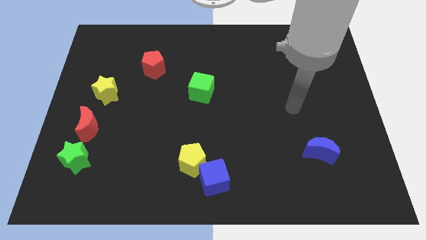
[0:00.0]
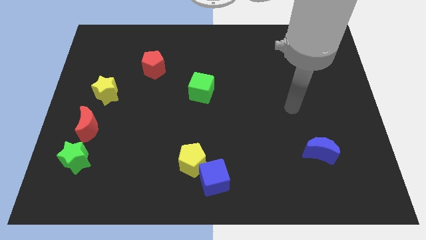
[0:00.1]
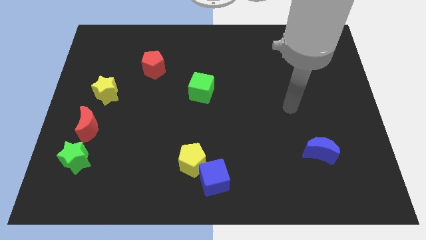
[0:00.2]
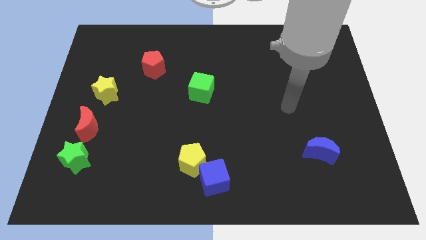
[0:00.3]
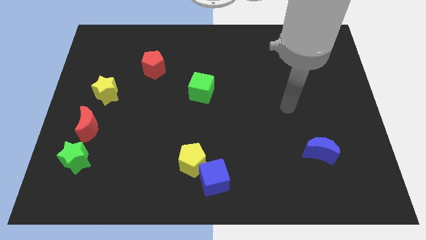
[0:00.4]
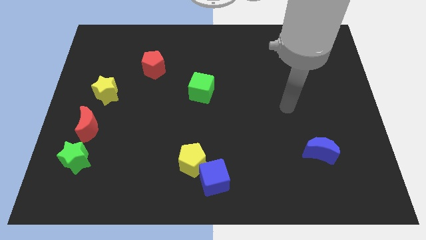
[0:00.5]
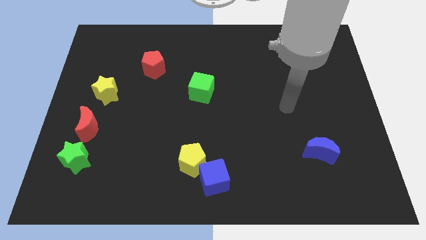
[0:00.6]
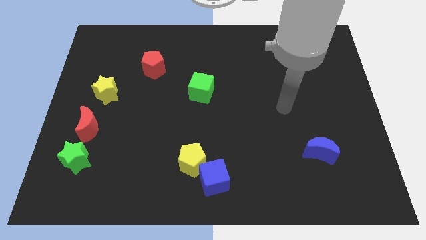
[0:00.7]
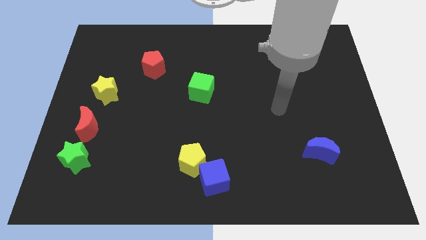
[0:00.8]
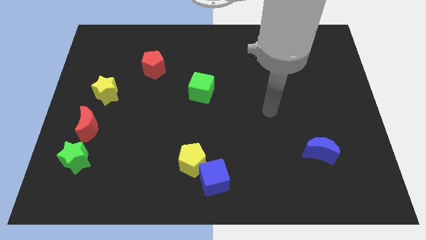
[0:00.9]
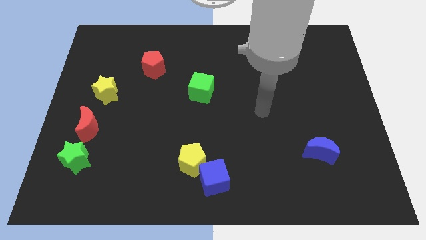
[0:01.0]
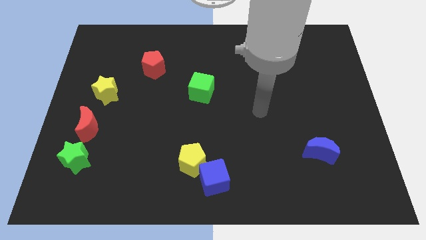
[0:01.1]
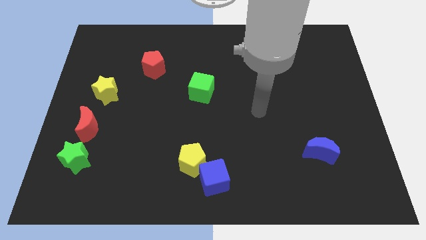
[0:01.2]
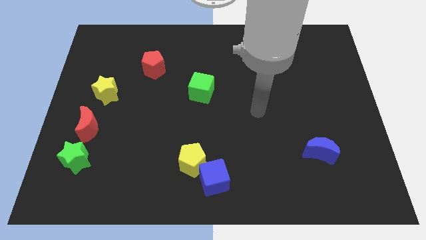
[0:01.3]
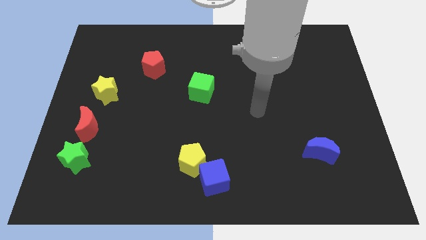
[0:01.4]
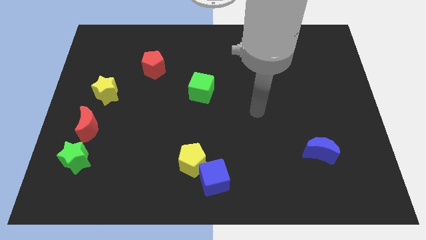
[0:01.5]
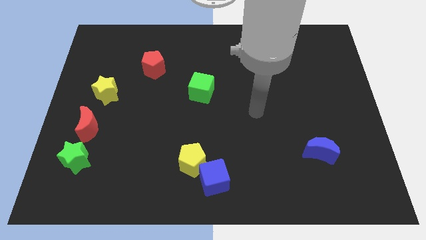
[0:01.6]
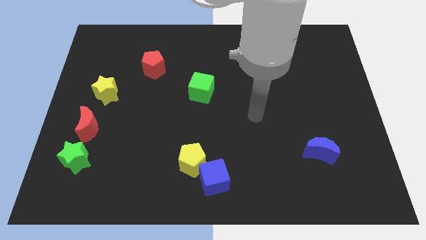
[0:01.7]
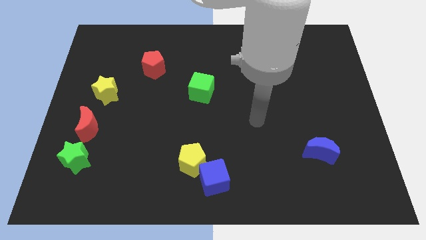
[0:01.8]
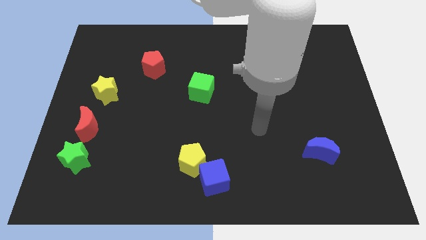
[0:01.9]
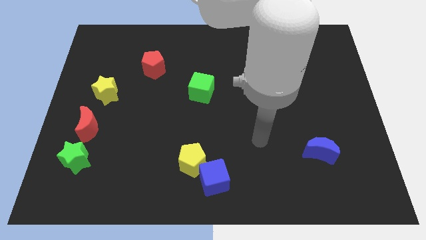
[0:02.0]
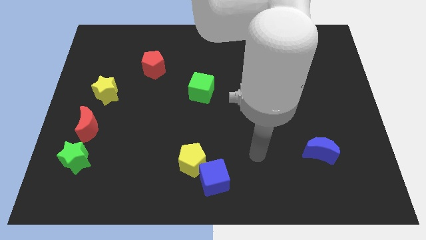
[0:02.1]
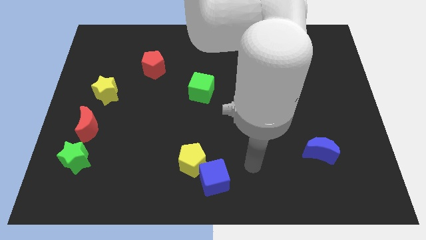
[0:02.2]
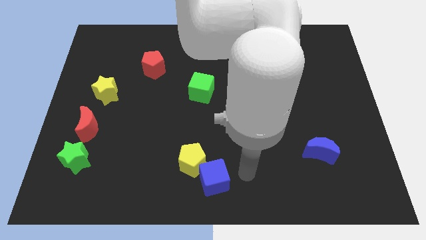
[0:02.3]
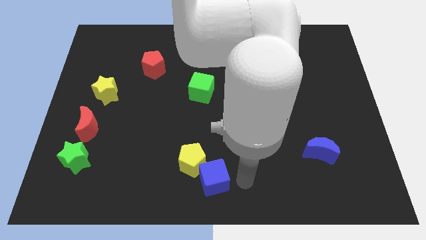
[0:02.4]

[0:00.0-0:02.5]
place your arm at the right of the blue cube

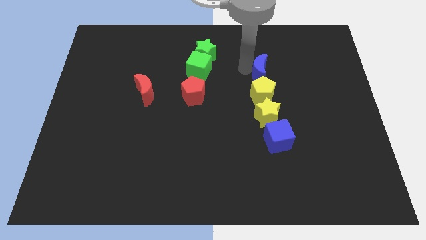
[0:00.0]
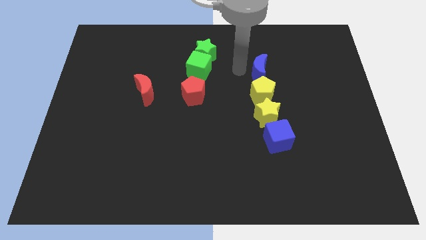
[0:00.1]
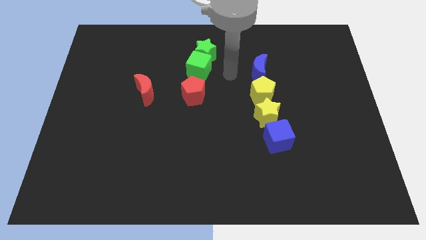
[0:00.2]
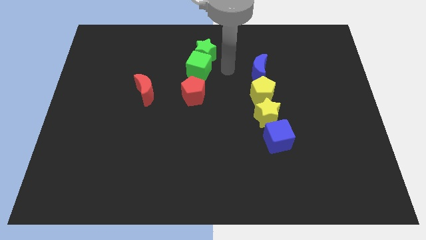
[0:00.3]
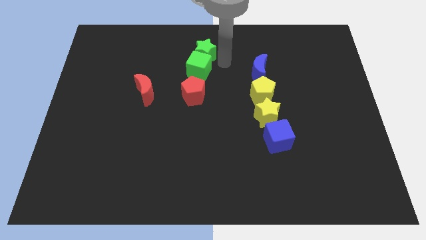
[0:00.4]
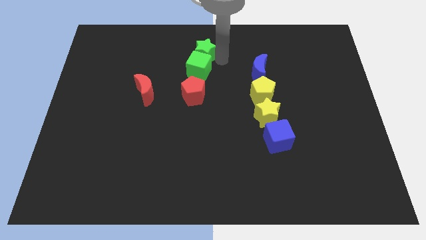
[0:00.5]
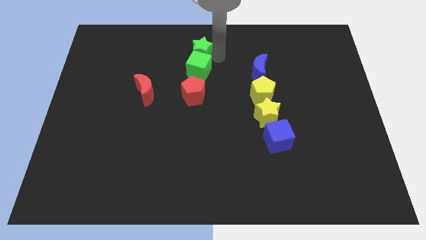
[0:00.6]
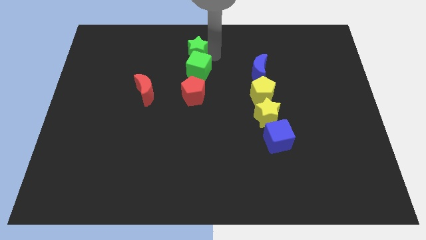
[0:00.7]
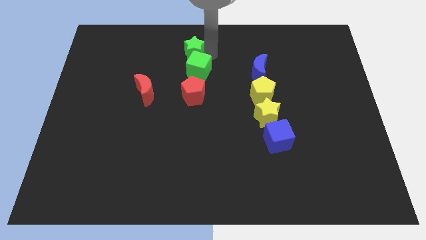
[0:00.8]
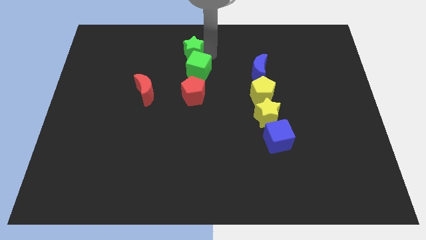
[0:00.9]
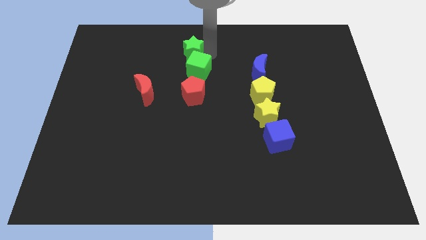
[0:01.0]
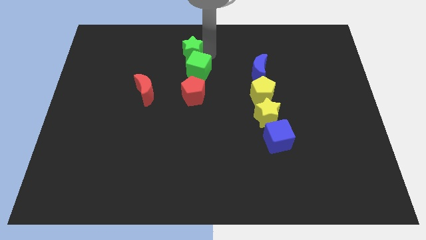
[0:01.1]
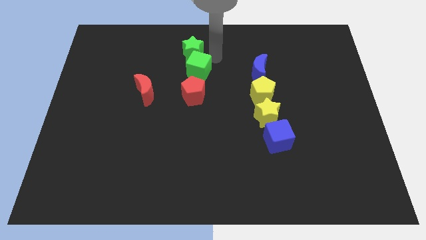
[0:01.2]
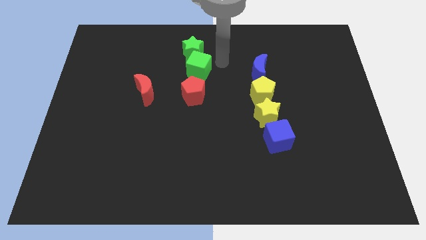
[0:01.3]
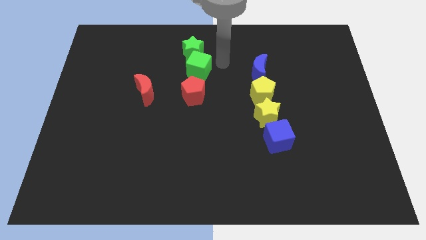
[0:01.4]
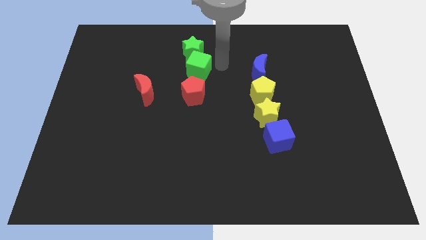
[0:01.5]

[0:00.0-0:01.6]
move the green star slightly to the left

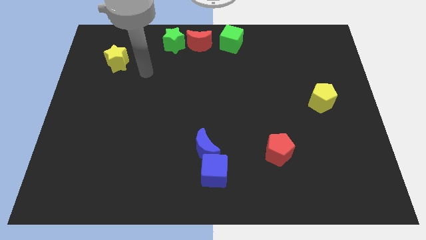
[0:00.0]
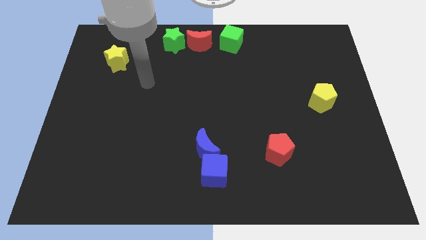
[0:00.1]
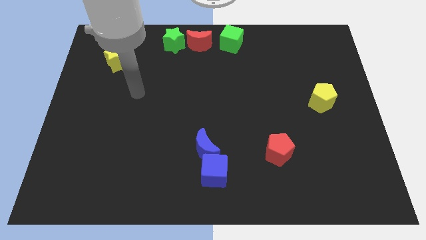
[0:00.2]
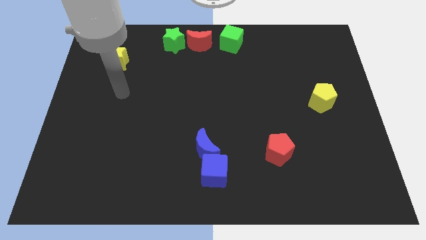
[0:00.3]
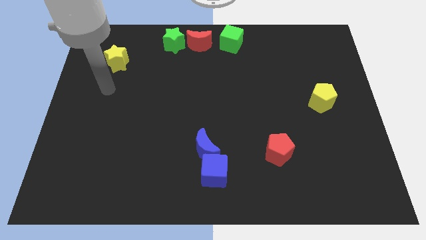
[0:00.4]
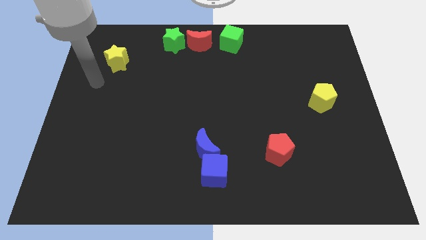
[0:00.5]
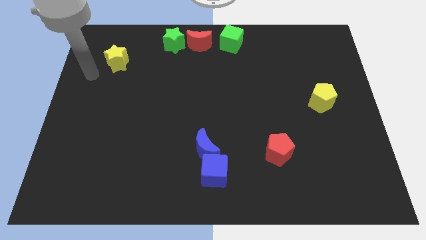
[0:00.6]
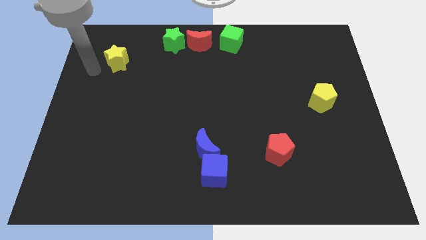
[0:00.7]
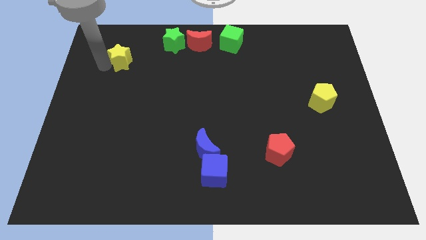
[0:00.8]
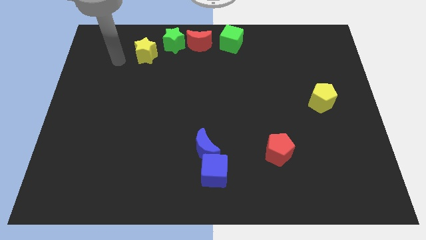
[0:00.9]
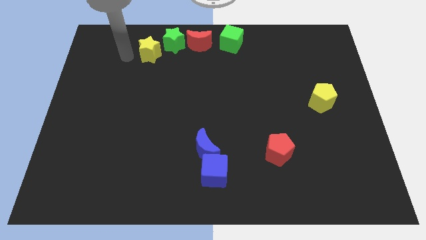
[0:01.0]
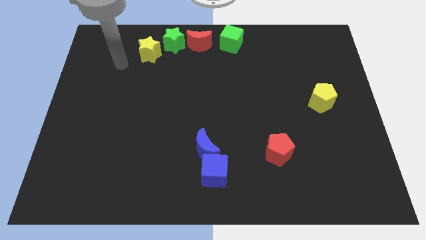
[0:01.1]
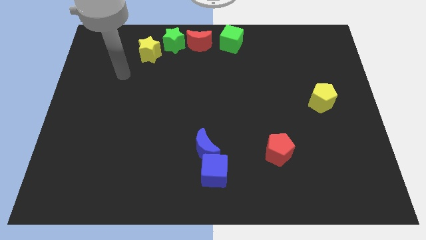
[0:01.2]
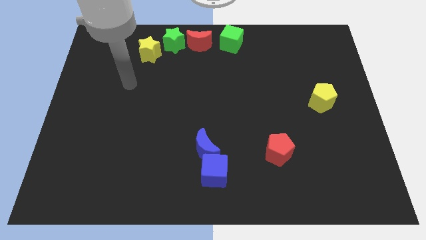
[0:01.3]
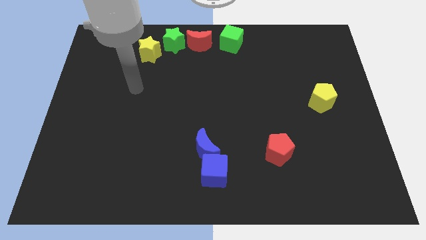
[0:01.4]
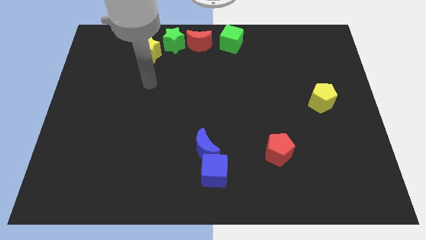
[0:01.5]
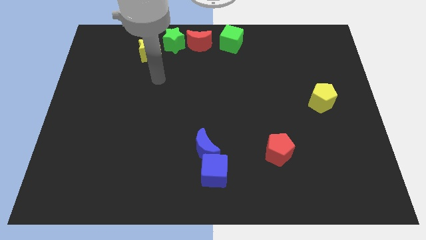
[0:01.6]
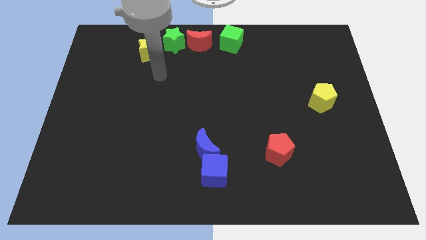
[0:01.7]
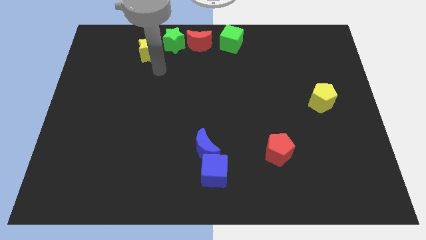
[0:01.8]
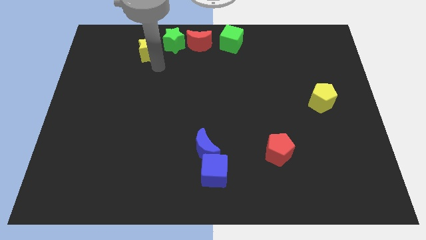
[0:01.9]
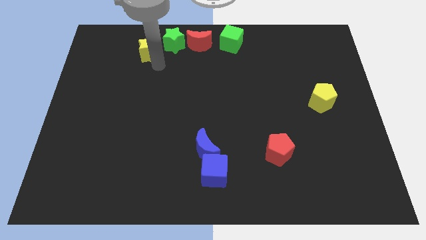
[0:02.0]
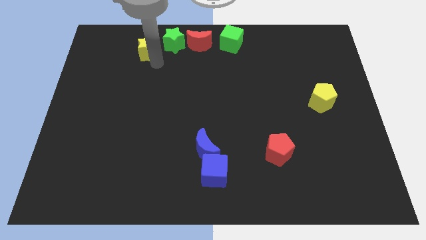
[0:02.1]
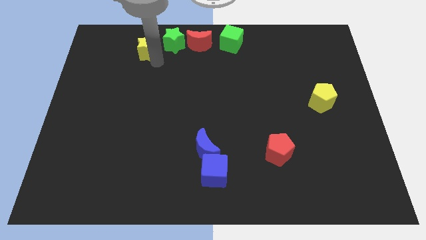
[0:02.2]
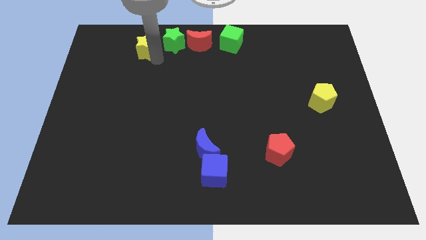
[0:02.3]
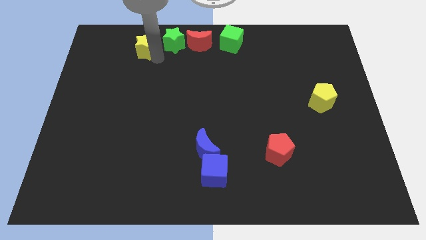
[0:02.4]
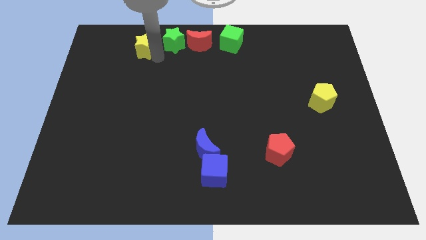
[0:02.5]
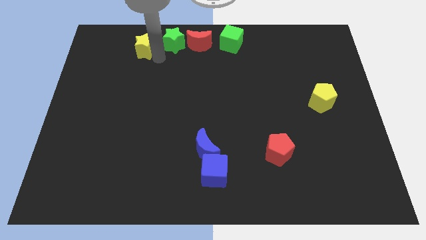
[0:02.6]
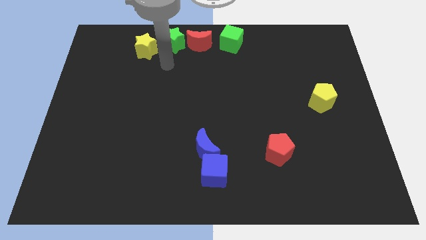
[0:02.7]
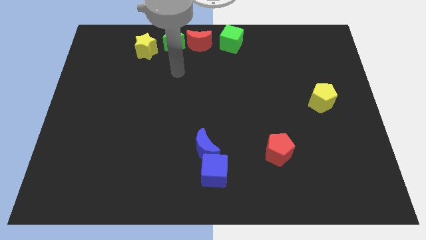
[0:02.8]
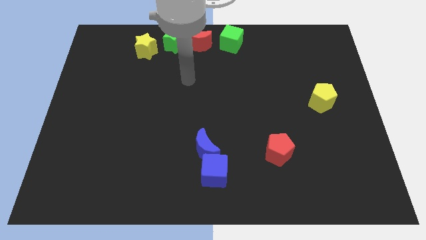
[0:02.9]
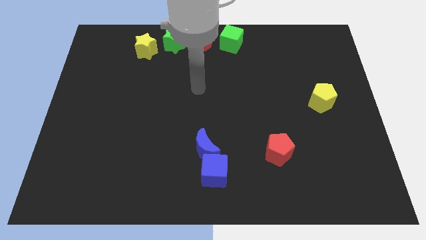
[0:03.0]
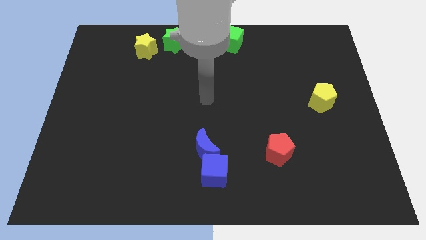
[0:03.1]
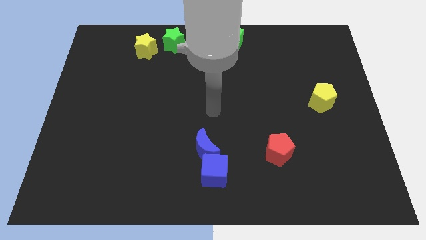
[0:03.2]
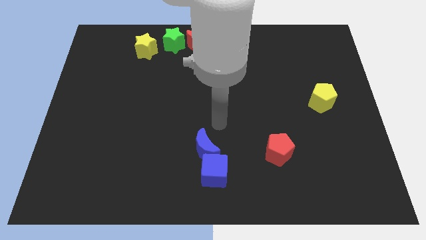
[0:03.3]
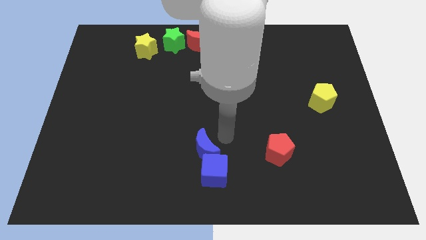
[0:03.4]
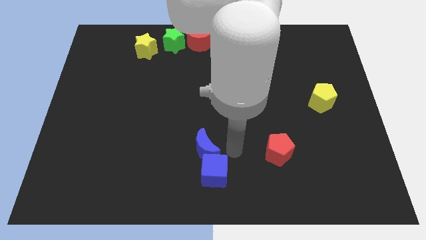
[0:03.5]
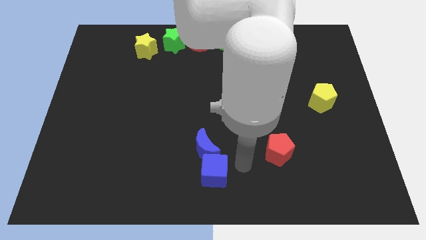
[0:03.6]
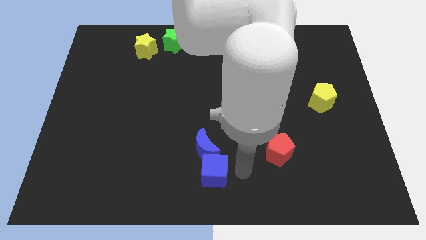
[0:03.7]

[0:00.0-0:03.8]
move the arm to the right of the blue cube

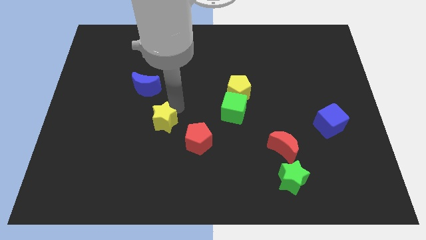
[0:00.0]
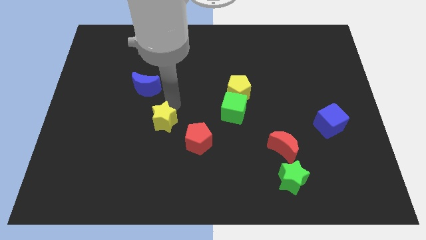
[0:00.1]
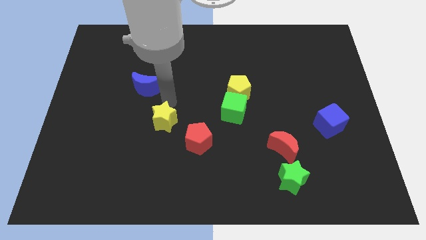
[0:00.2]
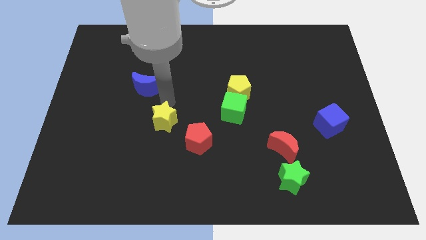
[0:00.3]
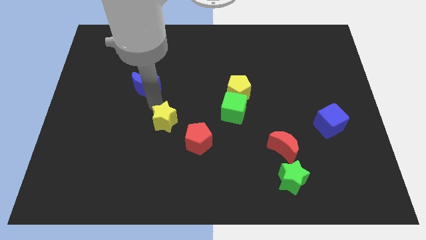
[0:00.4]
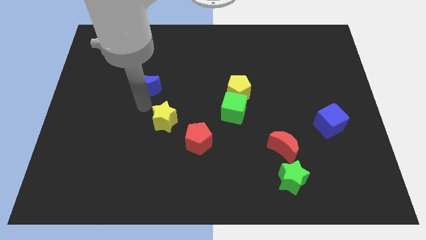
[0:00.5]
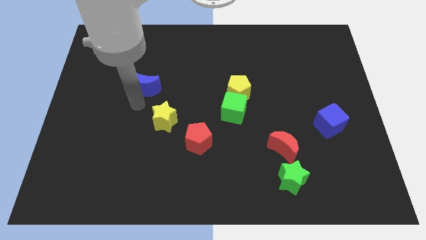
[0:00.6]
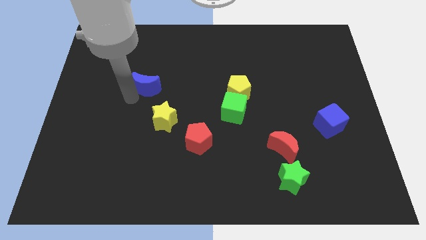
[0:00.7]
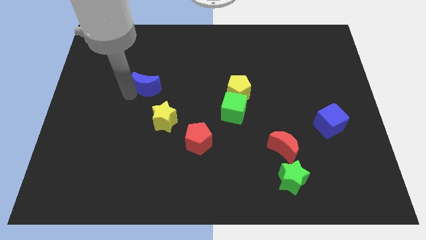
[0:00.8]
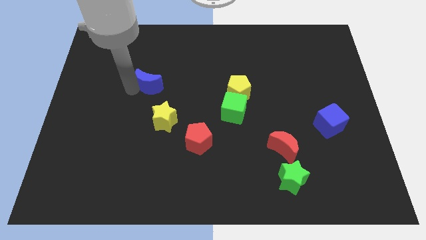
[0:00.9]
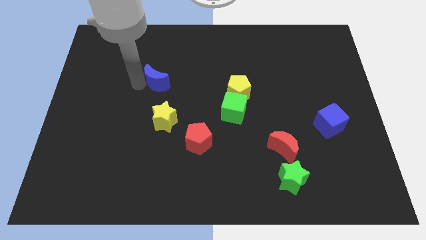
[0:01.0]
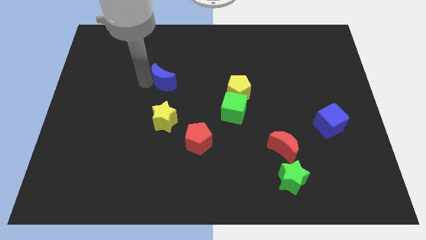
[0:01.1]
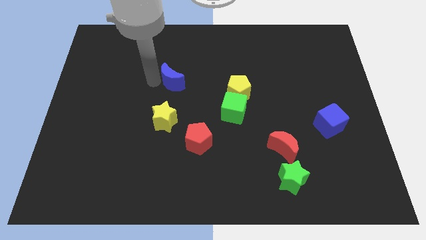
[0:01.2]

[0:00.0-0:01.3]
place the blue moon vertically above the yellow star
